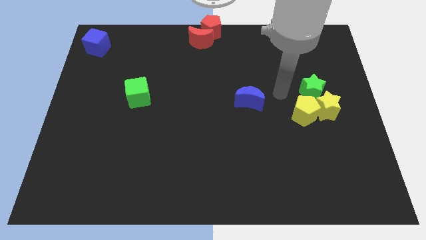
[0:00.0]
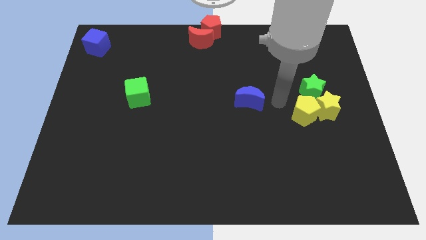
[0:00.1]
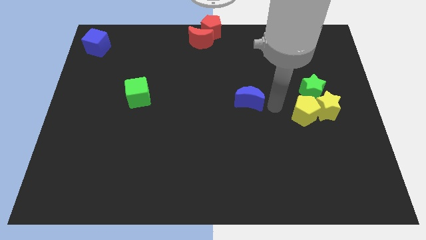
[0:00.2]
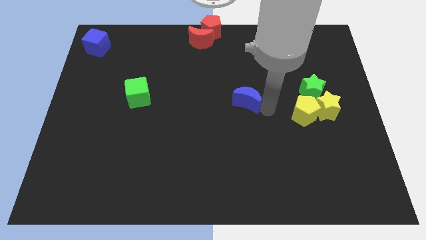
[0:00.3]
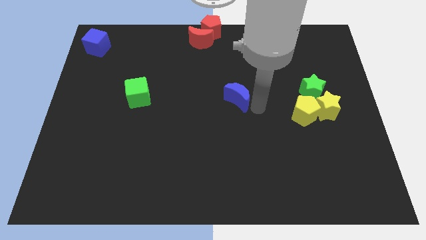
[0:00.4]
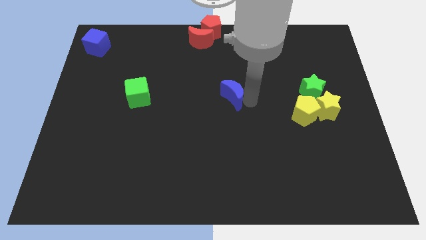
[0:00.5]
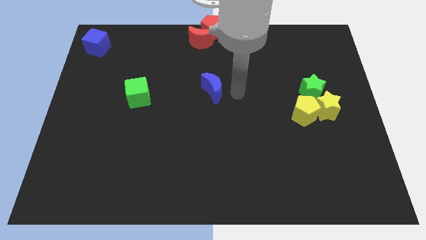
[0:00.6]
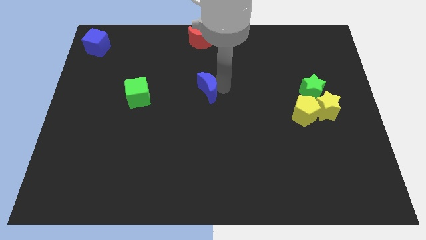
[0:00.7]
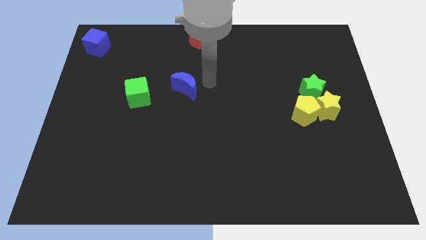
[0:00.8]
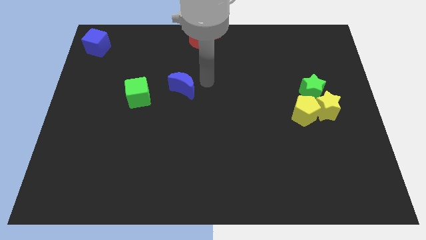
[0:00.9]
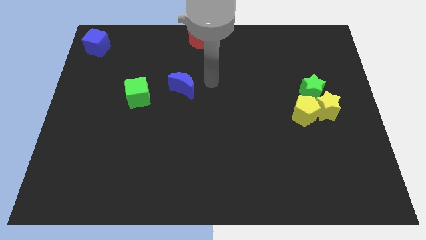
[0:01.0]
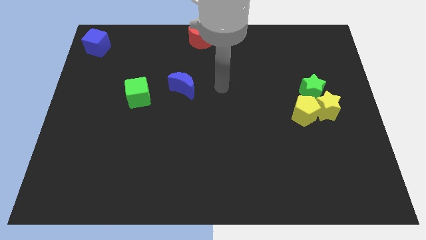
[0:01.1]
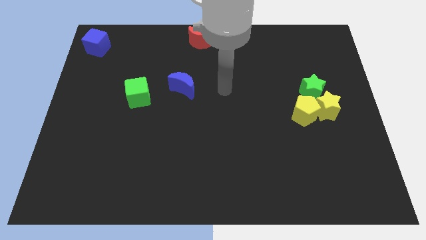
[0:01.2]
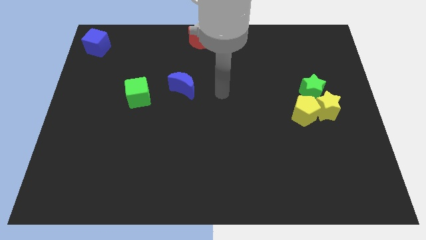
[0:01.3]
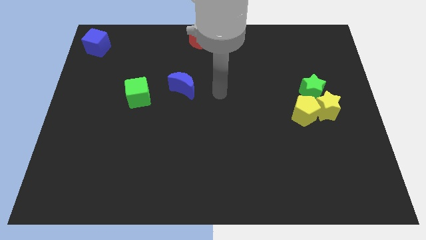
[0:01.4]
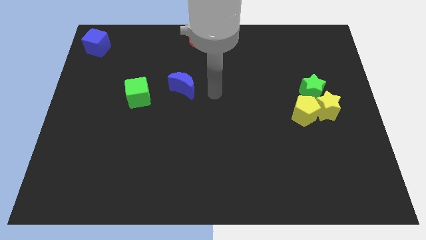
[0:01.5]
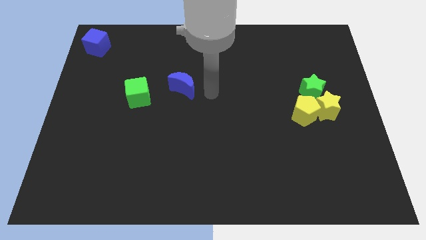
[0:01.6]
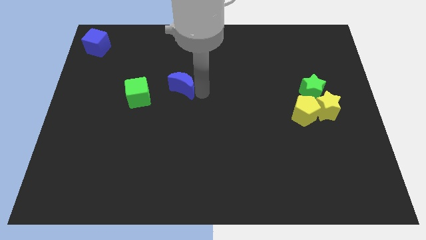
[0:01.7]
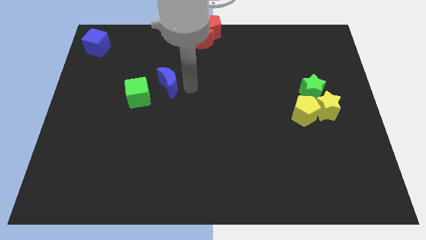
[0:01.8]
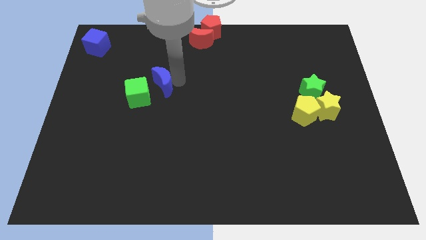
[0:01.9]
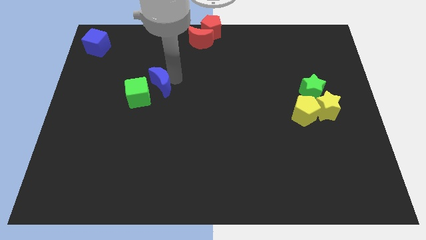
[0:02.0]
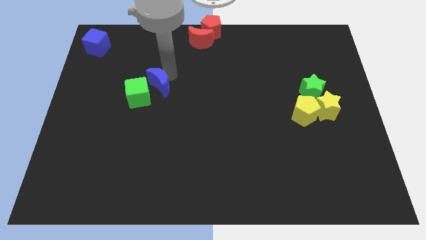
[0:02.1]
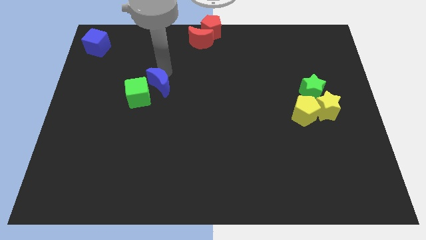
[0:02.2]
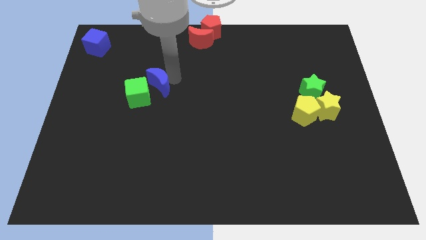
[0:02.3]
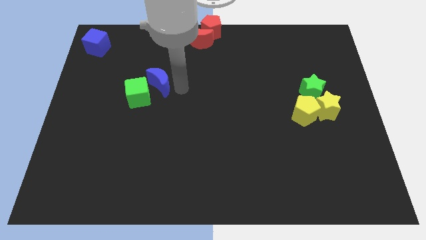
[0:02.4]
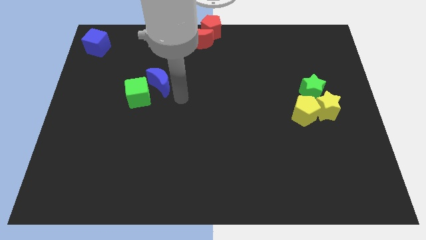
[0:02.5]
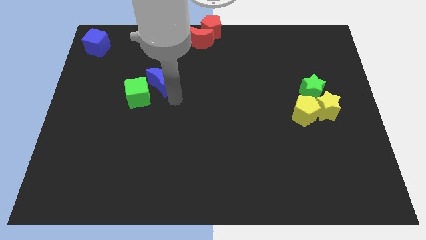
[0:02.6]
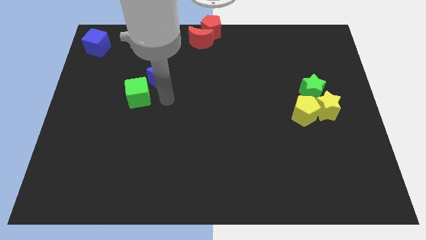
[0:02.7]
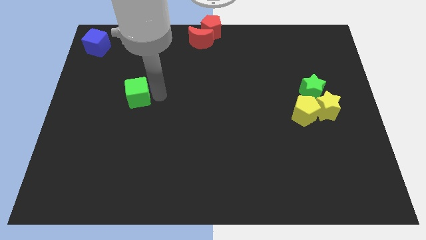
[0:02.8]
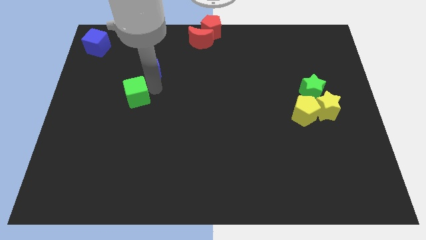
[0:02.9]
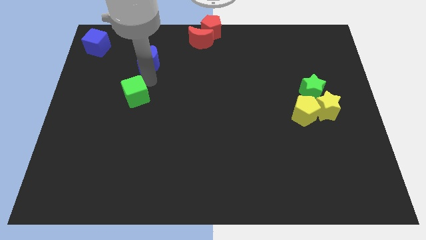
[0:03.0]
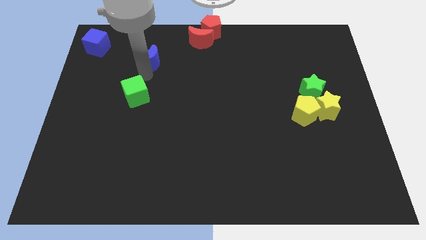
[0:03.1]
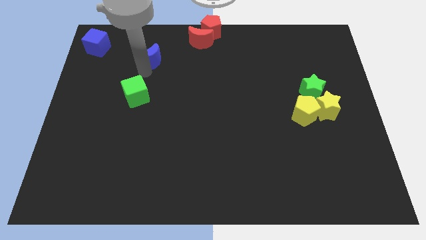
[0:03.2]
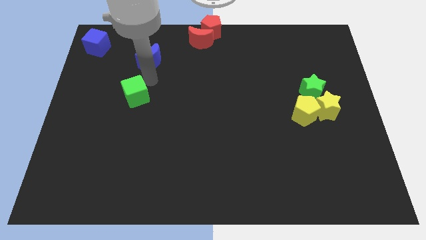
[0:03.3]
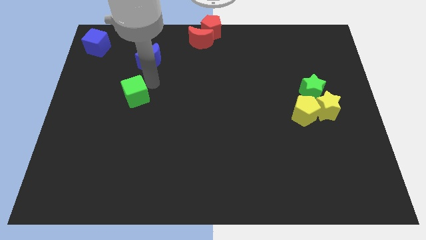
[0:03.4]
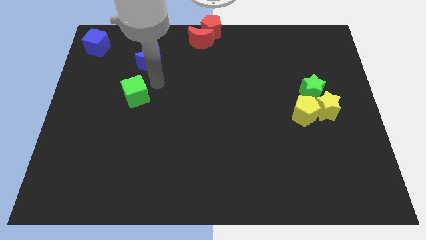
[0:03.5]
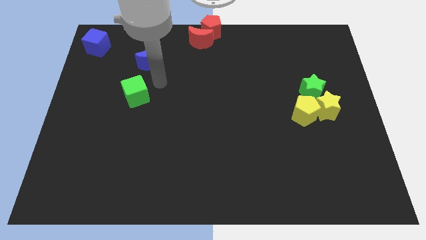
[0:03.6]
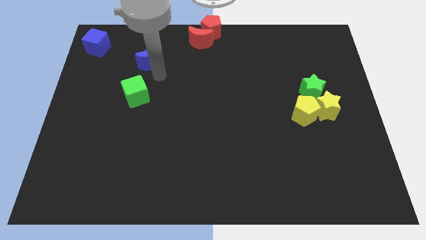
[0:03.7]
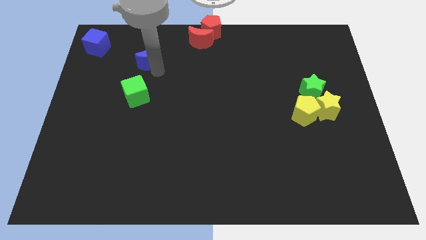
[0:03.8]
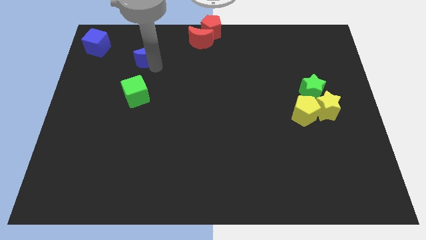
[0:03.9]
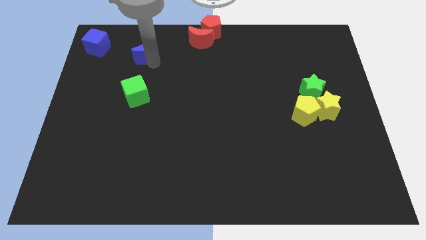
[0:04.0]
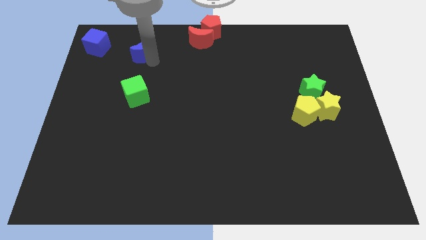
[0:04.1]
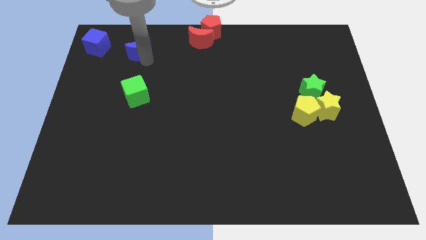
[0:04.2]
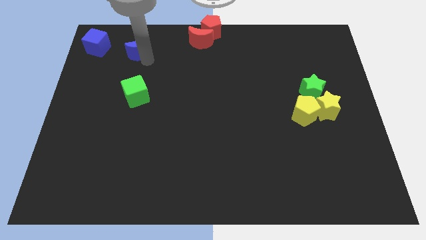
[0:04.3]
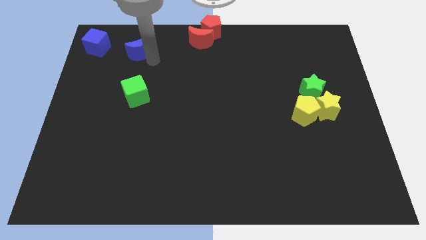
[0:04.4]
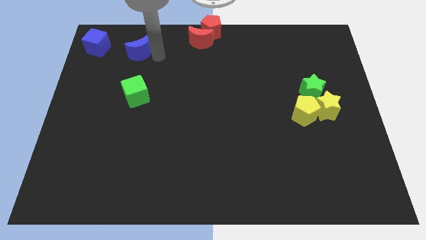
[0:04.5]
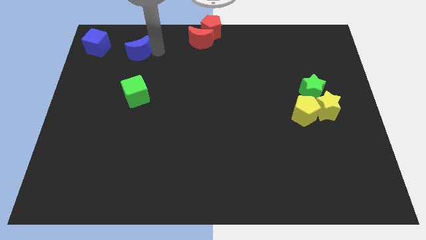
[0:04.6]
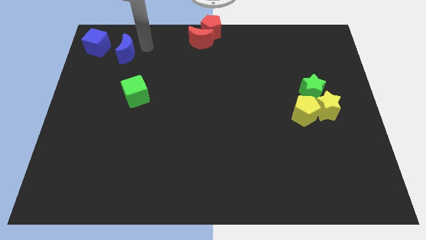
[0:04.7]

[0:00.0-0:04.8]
push blue moon towards blue cube

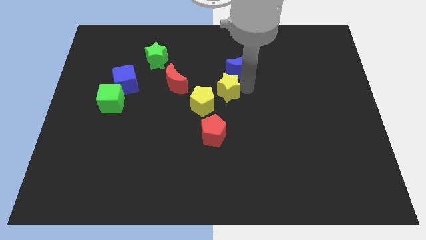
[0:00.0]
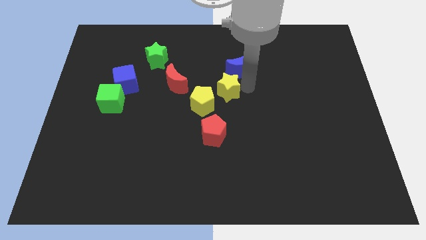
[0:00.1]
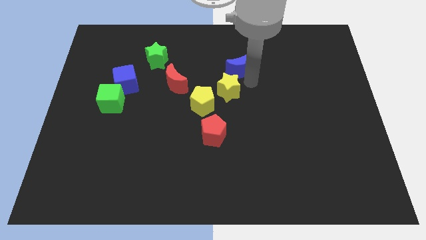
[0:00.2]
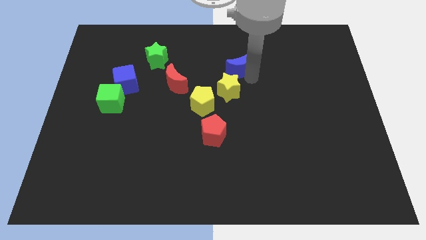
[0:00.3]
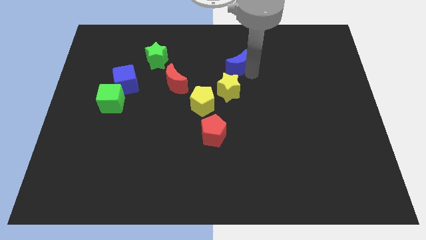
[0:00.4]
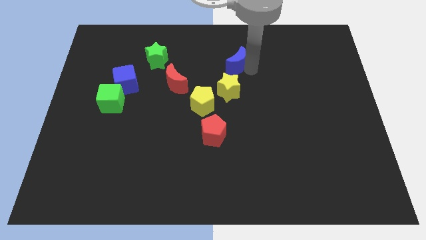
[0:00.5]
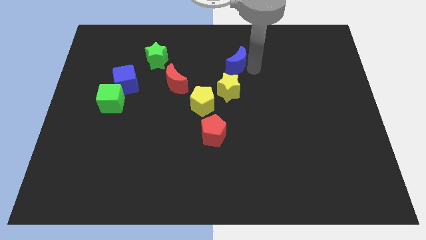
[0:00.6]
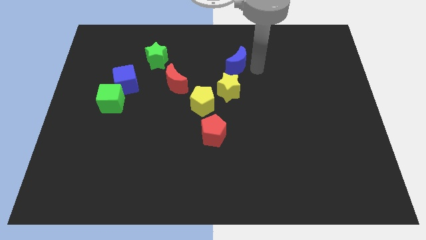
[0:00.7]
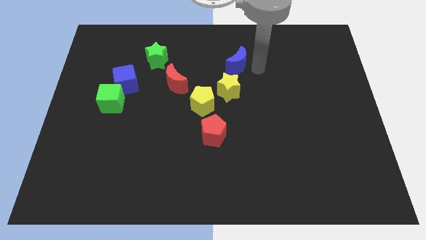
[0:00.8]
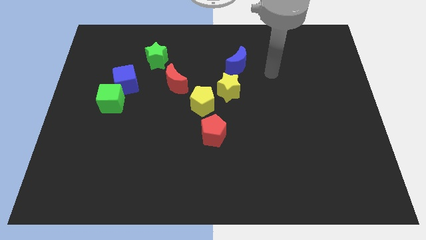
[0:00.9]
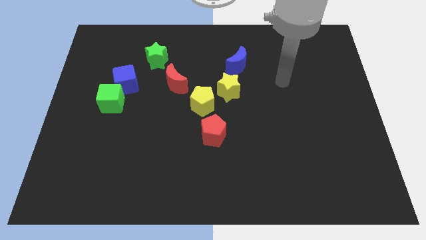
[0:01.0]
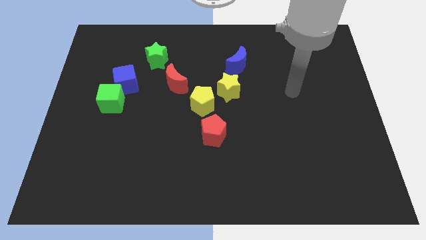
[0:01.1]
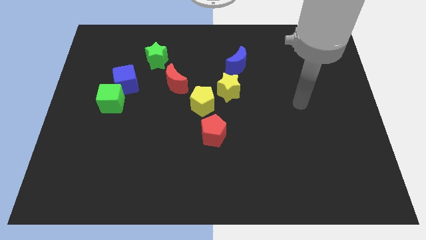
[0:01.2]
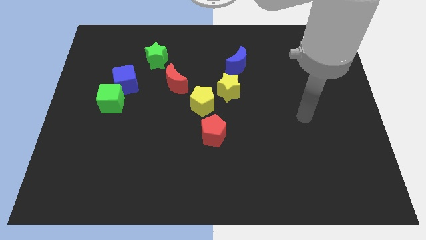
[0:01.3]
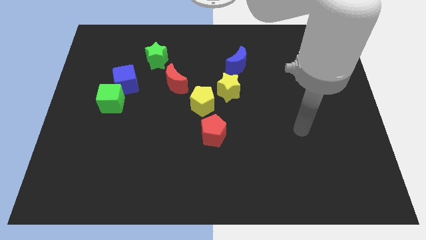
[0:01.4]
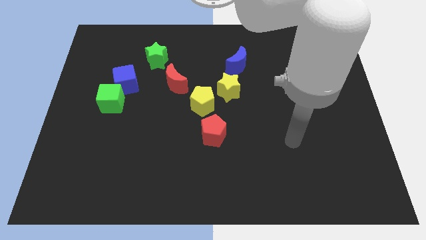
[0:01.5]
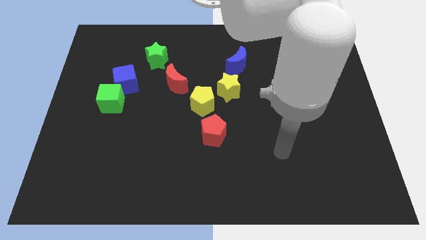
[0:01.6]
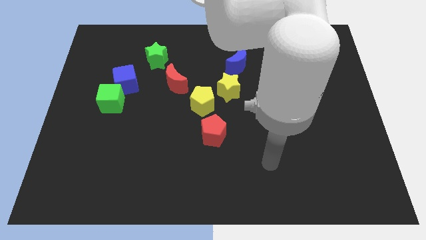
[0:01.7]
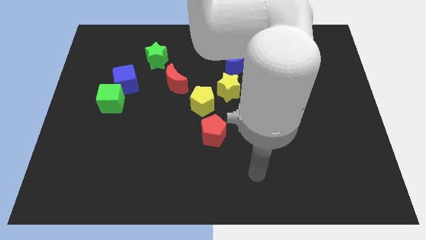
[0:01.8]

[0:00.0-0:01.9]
move the blue moon slightly up

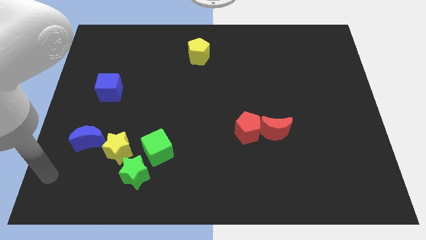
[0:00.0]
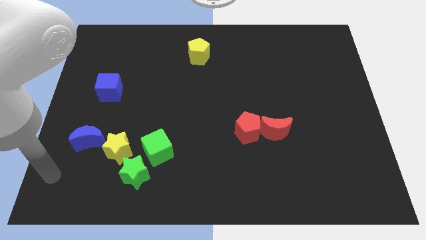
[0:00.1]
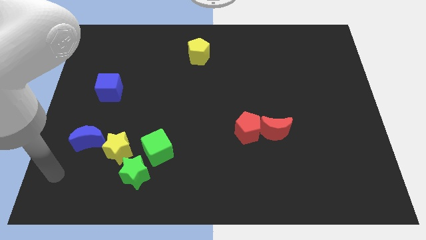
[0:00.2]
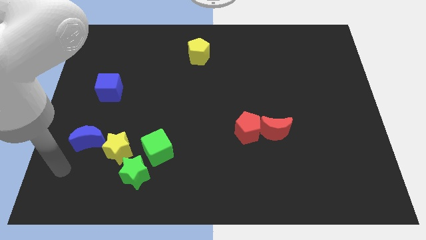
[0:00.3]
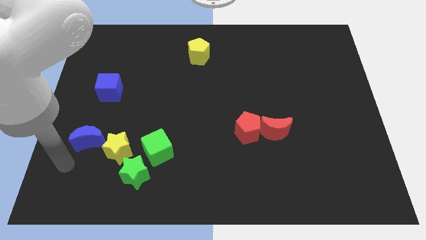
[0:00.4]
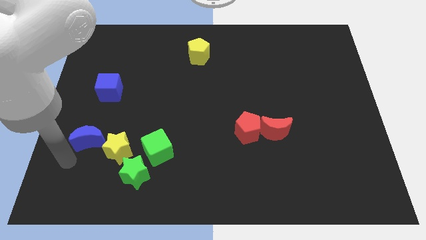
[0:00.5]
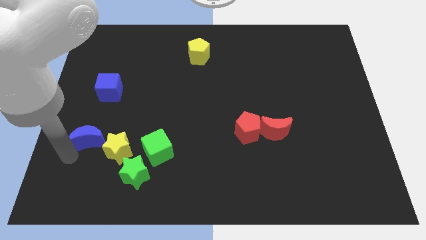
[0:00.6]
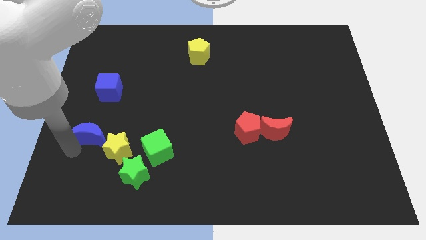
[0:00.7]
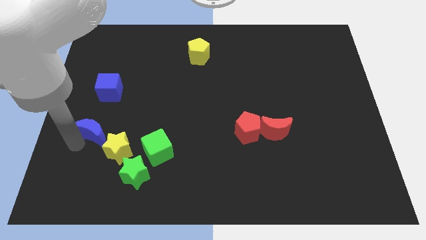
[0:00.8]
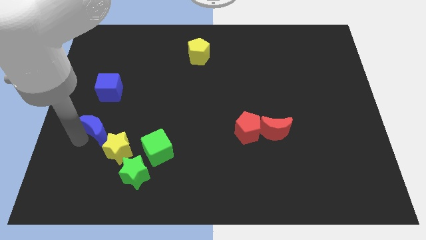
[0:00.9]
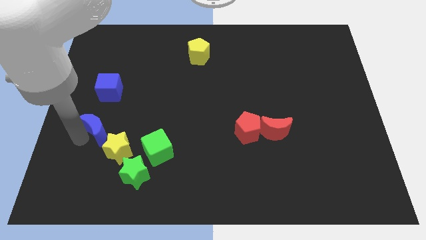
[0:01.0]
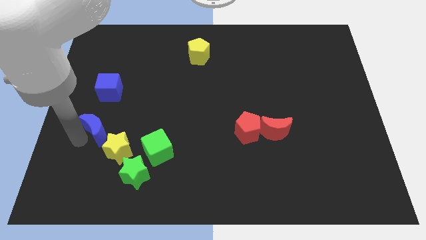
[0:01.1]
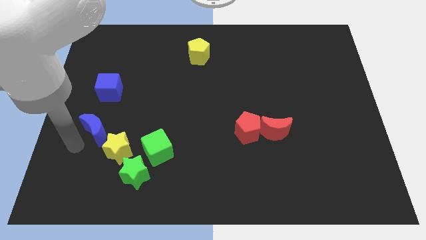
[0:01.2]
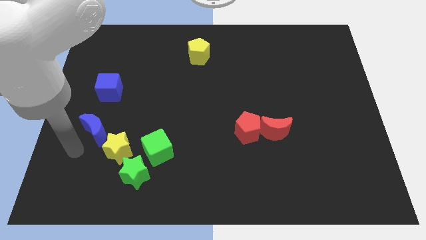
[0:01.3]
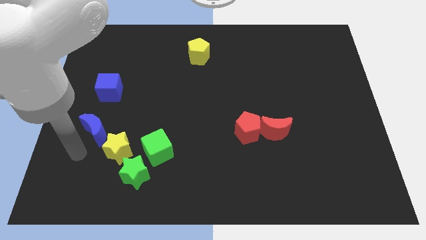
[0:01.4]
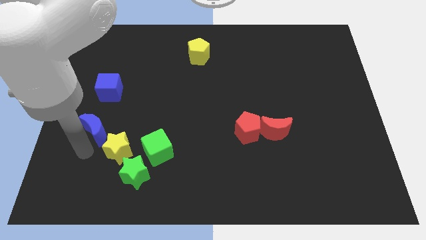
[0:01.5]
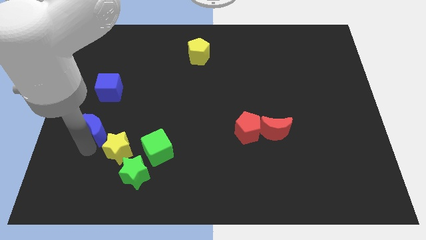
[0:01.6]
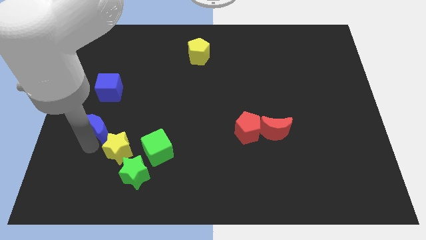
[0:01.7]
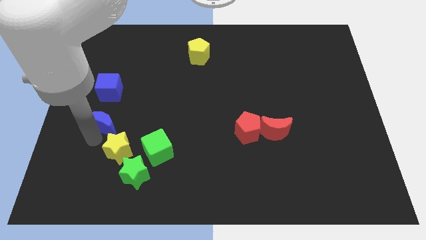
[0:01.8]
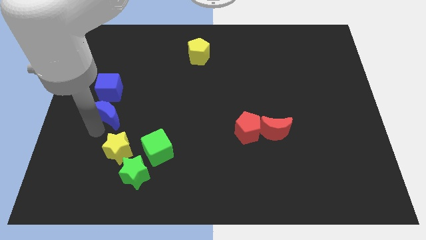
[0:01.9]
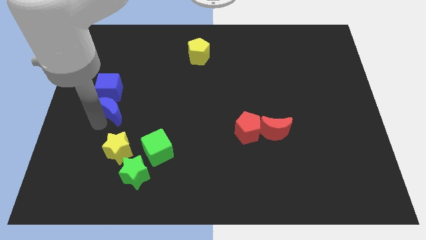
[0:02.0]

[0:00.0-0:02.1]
push the blue crescent to the bottom of the blue cube
